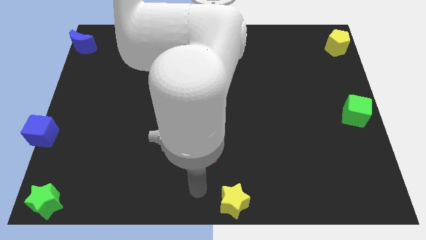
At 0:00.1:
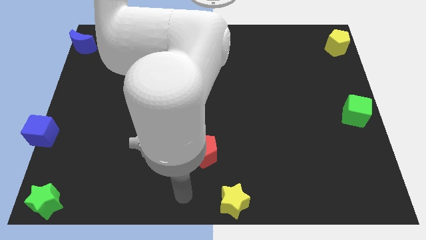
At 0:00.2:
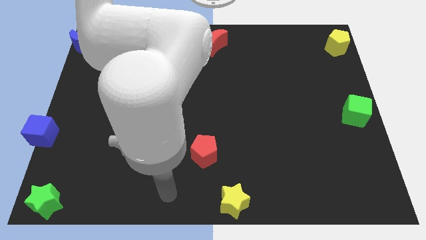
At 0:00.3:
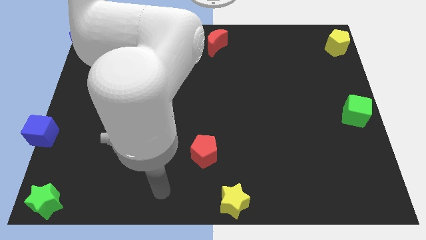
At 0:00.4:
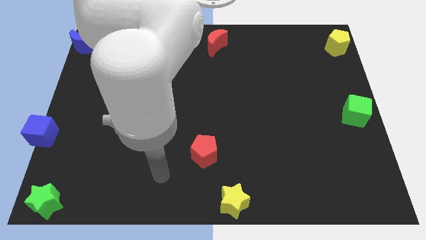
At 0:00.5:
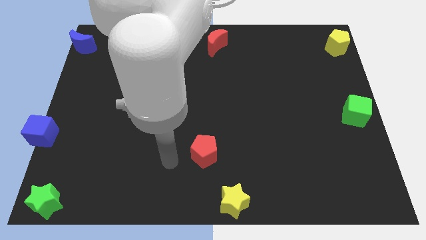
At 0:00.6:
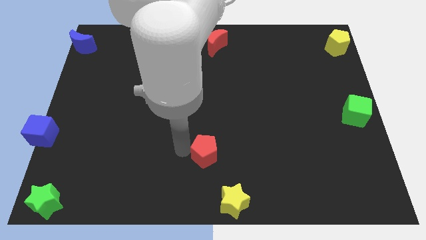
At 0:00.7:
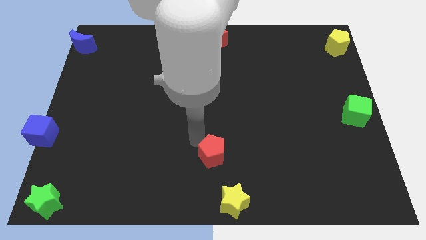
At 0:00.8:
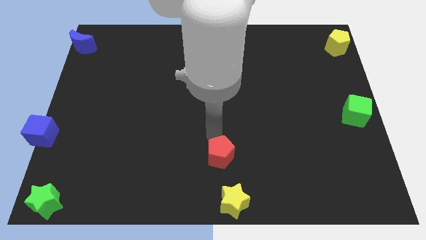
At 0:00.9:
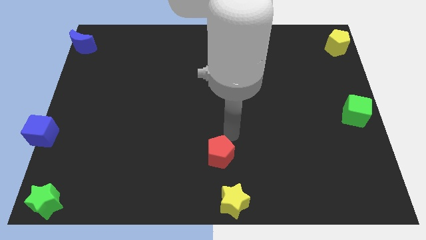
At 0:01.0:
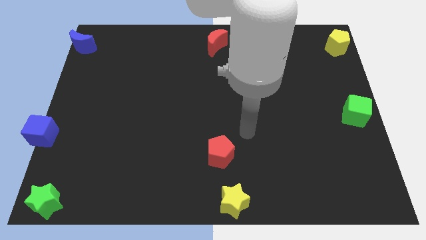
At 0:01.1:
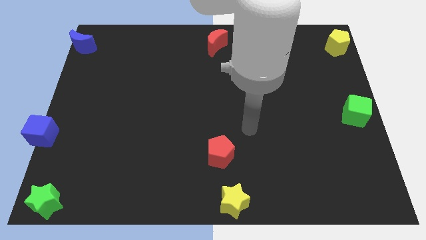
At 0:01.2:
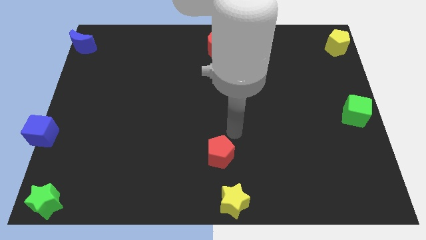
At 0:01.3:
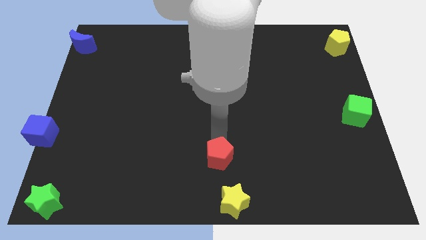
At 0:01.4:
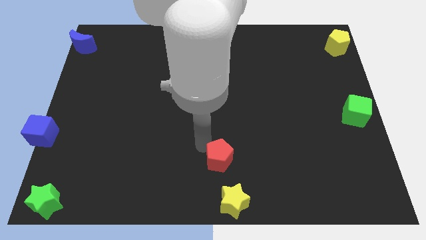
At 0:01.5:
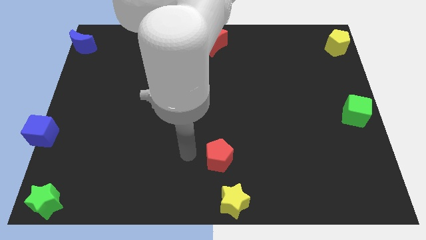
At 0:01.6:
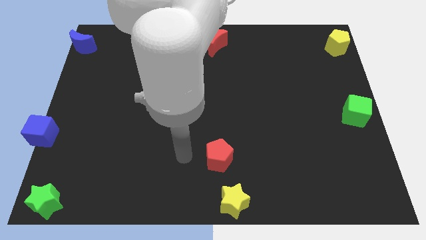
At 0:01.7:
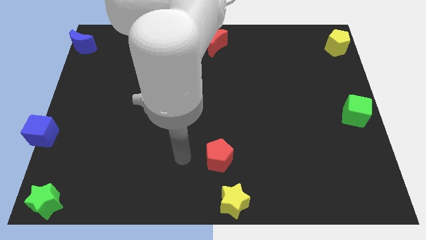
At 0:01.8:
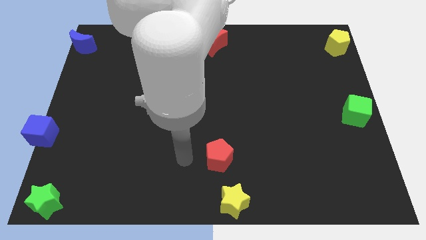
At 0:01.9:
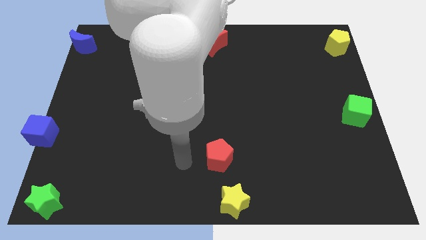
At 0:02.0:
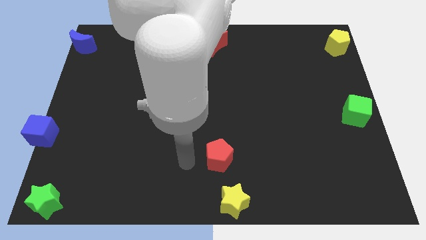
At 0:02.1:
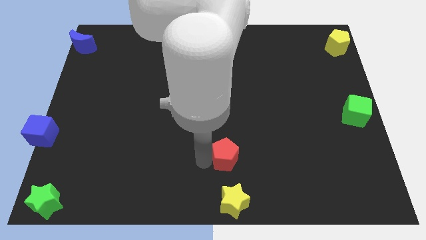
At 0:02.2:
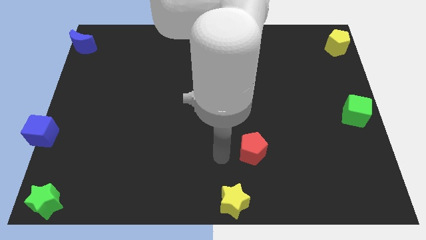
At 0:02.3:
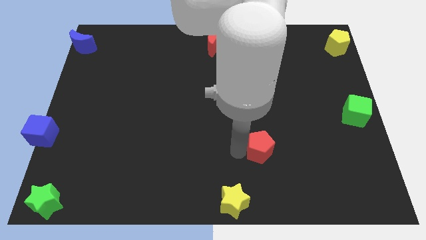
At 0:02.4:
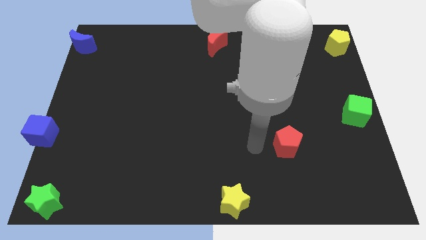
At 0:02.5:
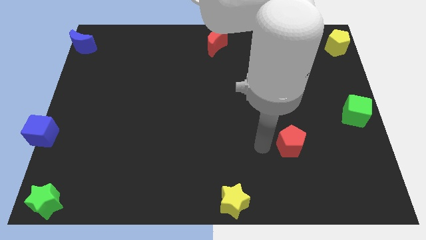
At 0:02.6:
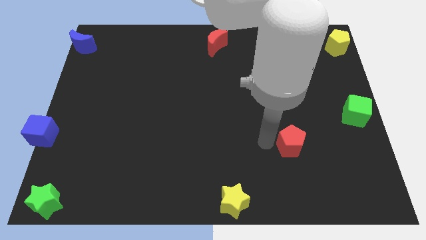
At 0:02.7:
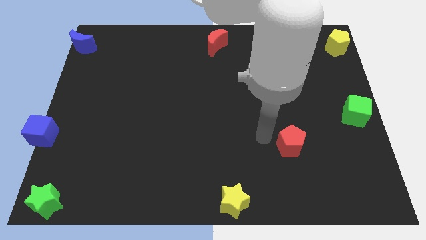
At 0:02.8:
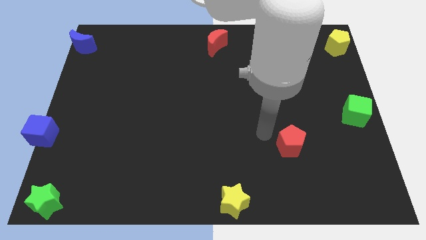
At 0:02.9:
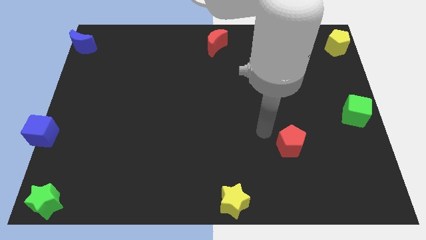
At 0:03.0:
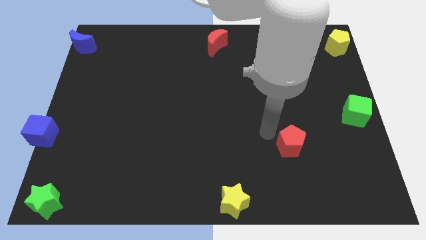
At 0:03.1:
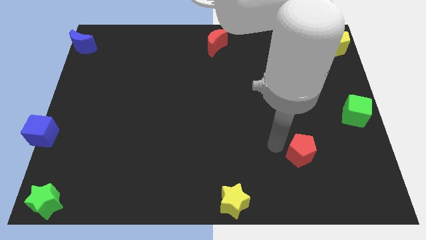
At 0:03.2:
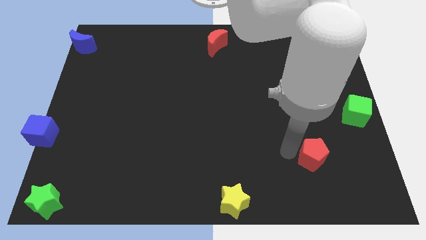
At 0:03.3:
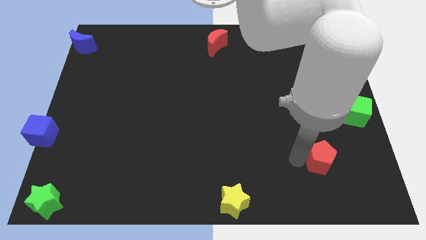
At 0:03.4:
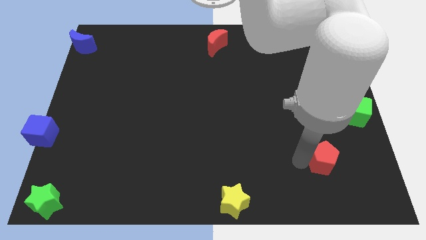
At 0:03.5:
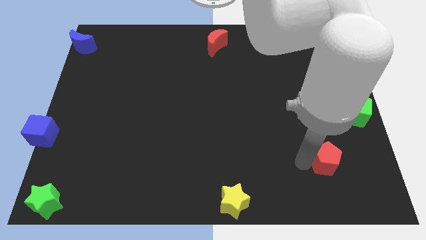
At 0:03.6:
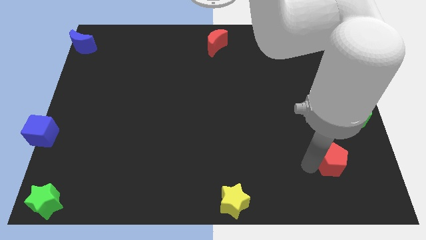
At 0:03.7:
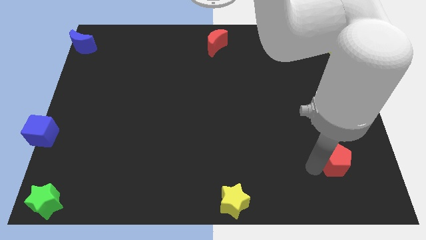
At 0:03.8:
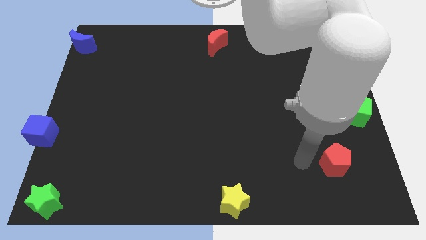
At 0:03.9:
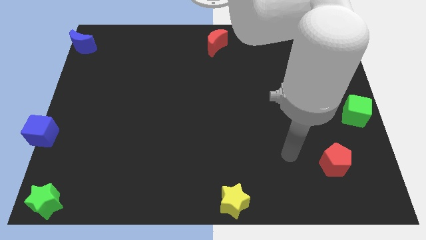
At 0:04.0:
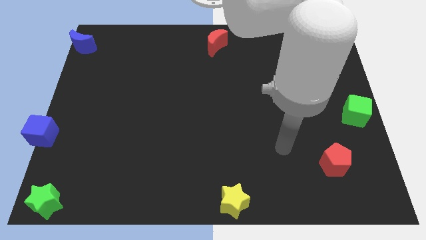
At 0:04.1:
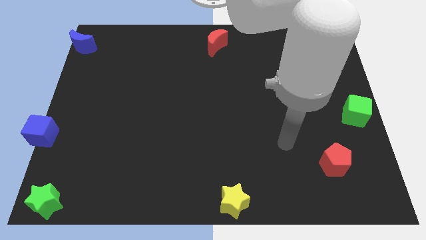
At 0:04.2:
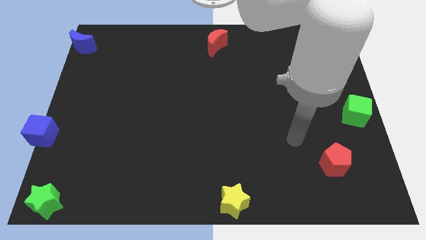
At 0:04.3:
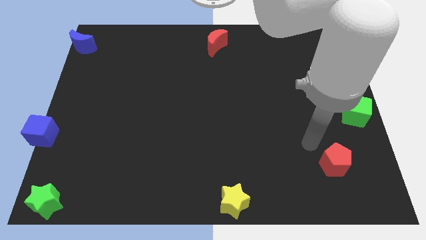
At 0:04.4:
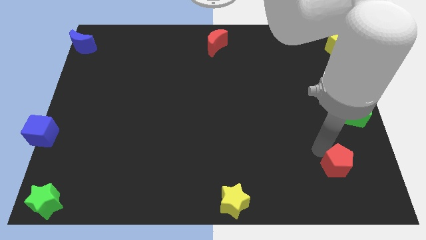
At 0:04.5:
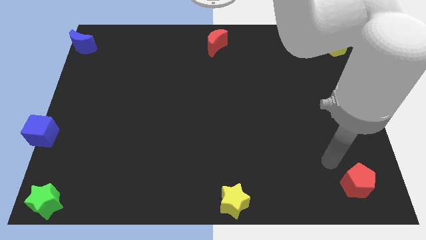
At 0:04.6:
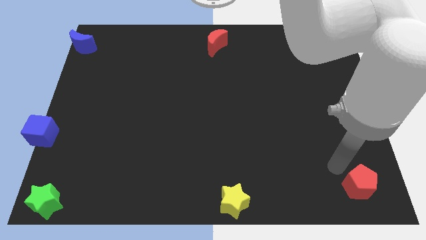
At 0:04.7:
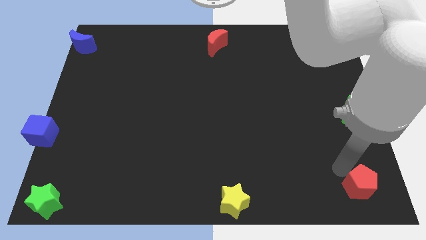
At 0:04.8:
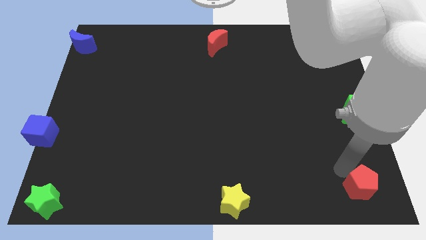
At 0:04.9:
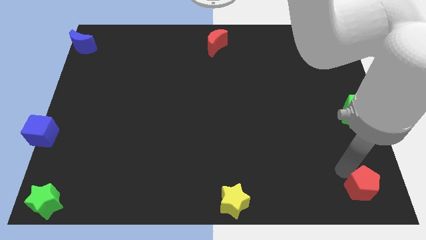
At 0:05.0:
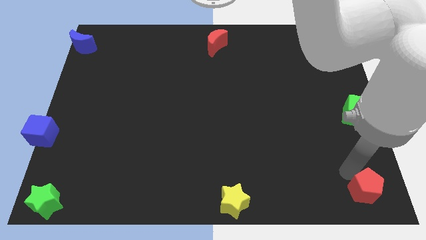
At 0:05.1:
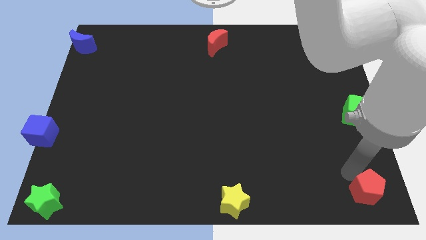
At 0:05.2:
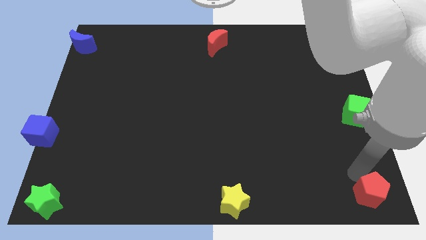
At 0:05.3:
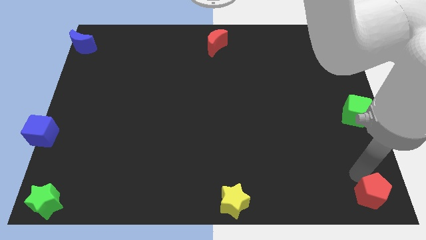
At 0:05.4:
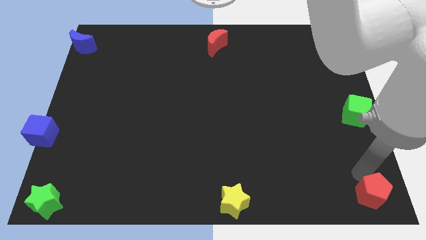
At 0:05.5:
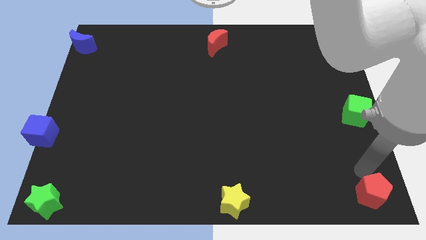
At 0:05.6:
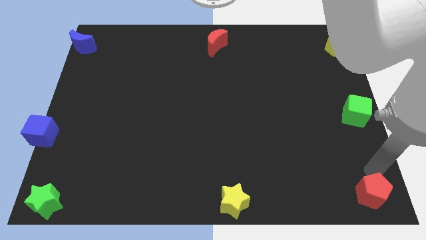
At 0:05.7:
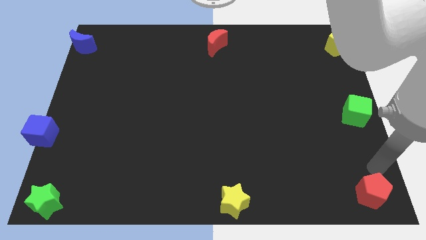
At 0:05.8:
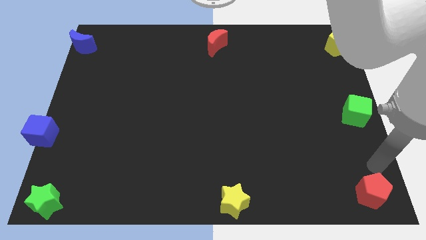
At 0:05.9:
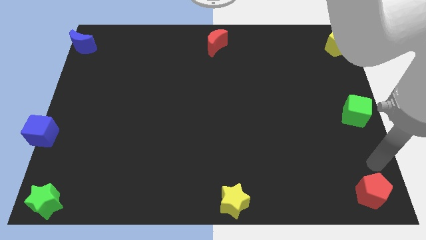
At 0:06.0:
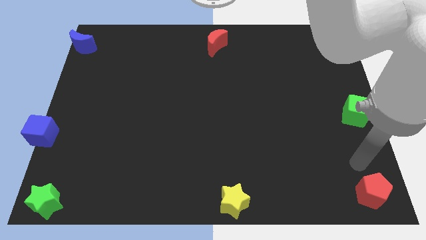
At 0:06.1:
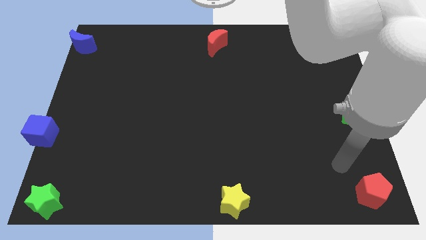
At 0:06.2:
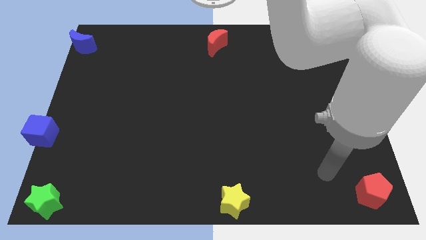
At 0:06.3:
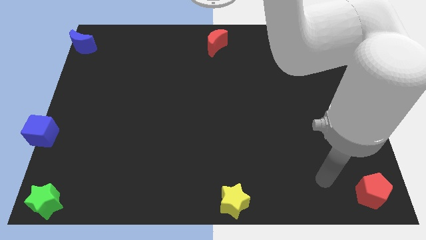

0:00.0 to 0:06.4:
move the red pentagon to the bottom right of the board

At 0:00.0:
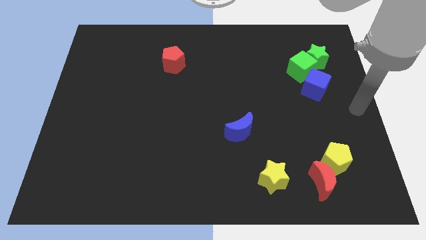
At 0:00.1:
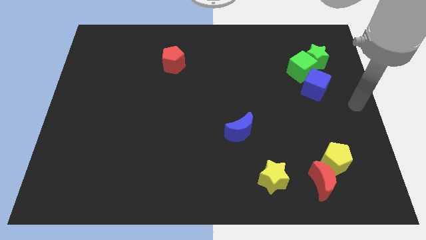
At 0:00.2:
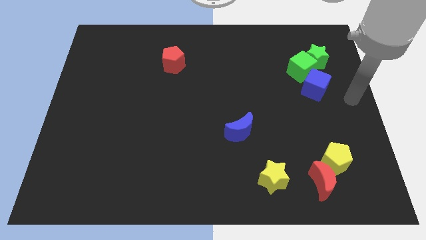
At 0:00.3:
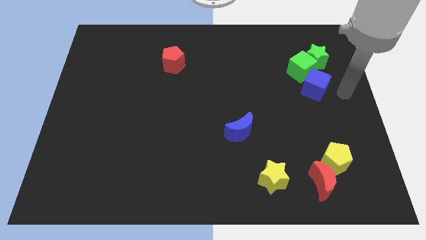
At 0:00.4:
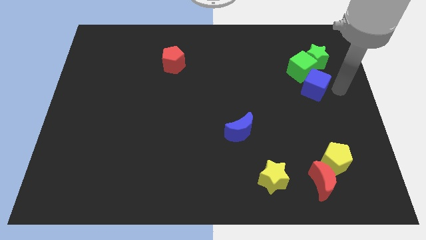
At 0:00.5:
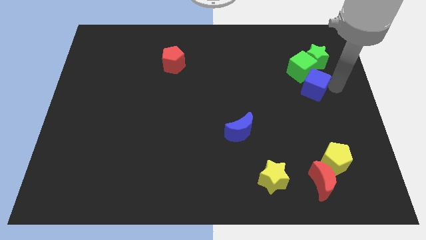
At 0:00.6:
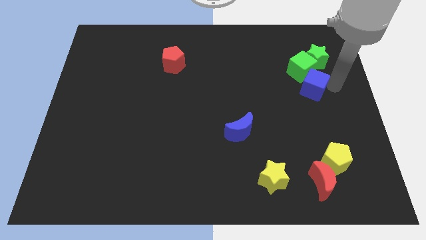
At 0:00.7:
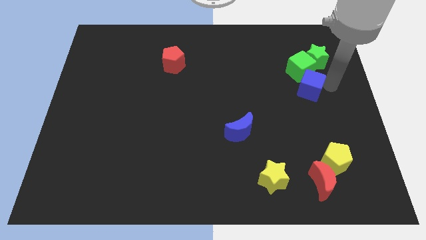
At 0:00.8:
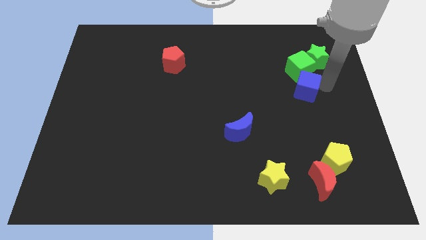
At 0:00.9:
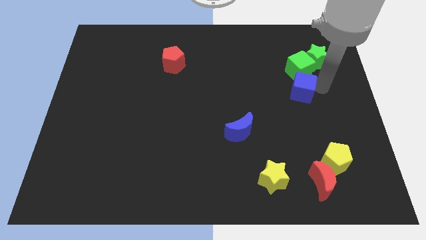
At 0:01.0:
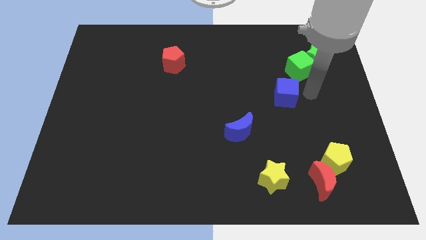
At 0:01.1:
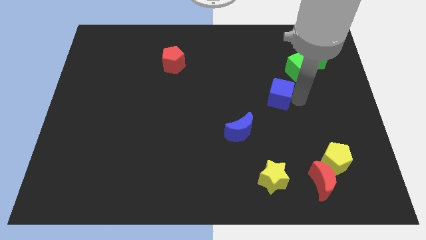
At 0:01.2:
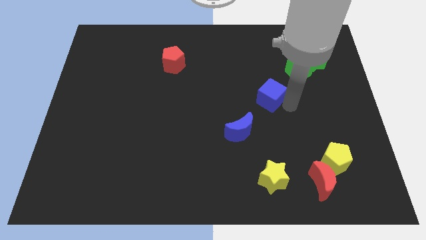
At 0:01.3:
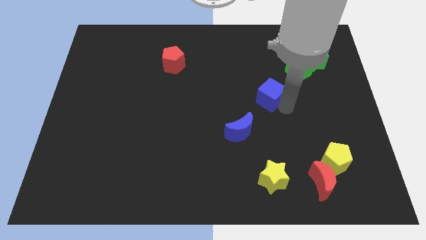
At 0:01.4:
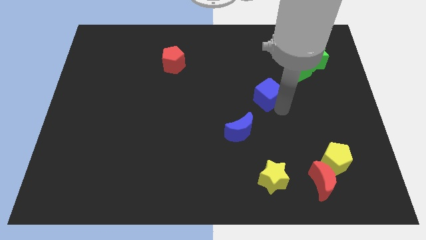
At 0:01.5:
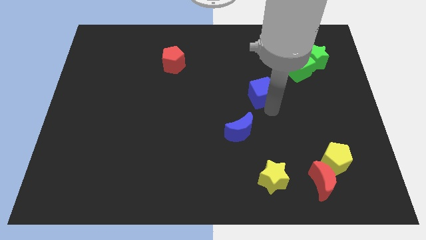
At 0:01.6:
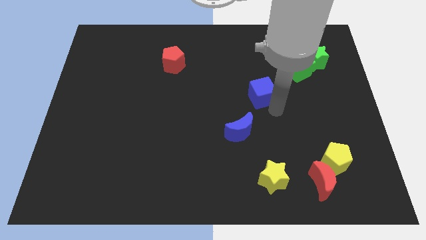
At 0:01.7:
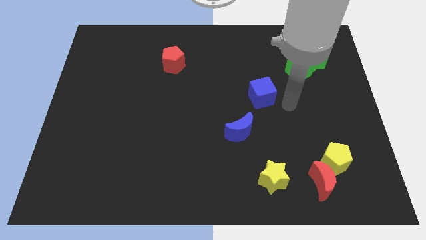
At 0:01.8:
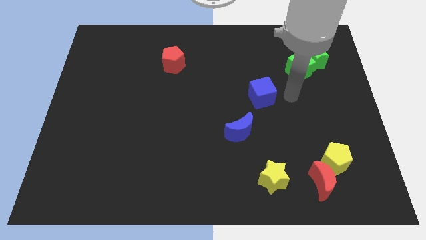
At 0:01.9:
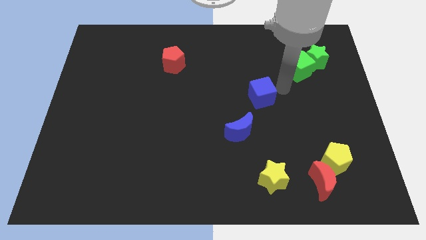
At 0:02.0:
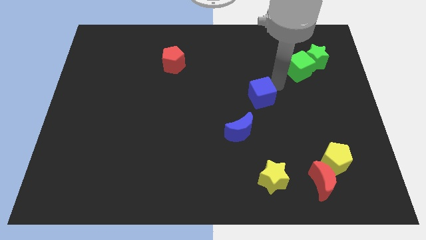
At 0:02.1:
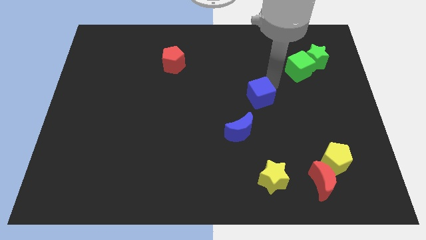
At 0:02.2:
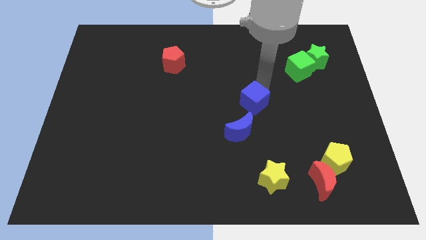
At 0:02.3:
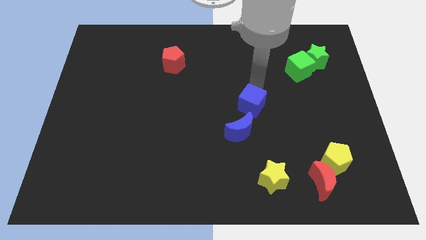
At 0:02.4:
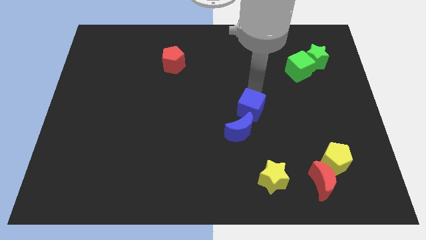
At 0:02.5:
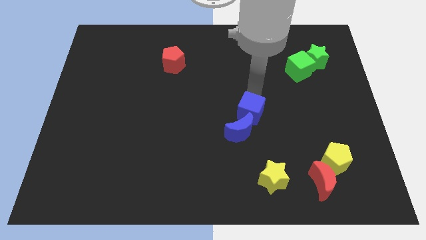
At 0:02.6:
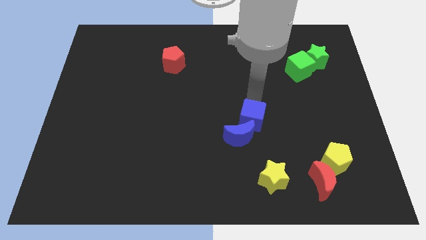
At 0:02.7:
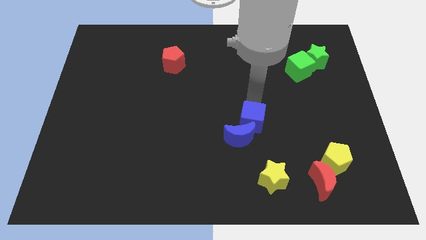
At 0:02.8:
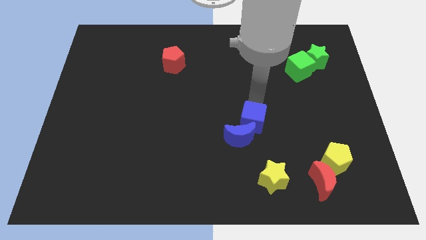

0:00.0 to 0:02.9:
move blue cube towards blue moon
